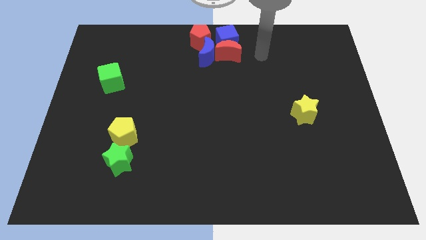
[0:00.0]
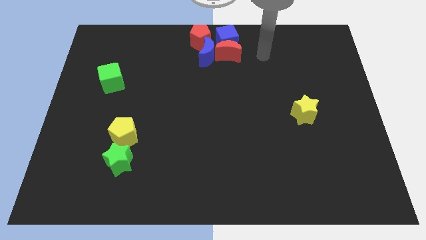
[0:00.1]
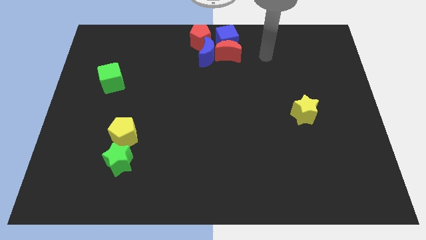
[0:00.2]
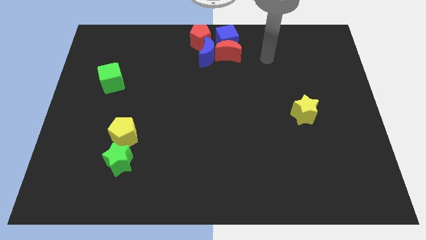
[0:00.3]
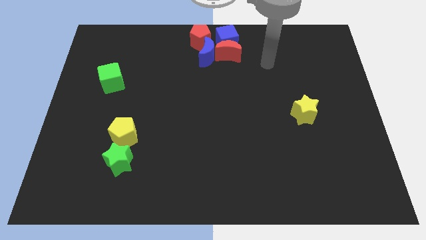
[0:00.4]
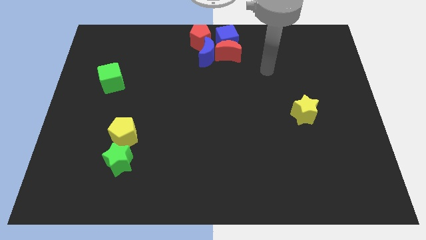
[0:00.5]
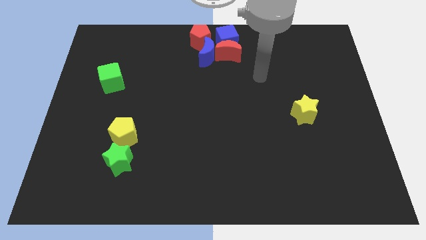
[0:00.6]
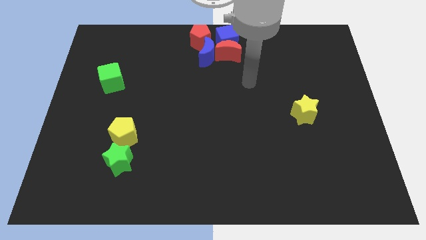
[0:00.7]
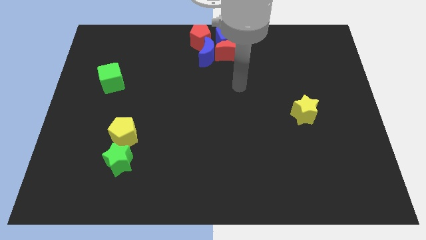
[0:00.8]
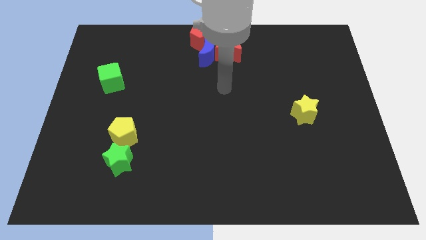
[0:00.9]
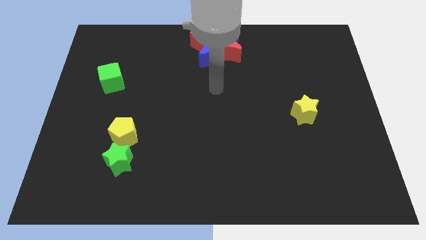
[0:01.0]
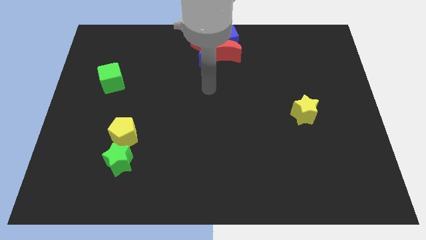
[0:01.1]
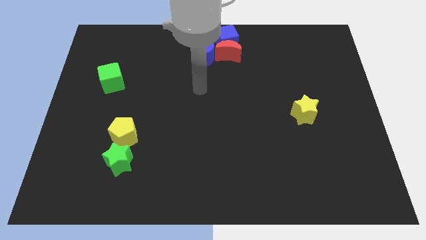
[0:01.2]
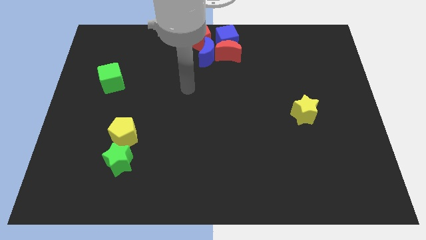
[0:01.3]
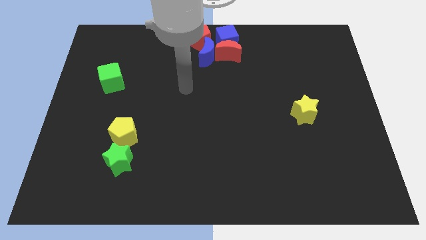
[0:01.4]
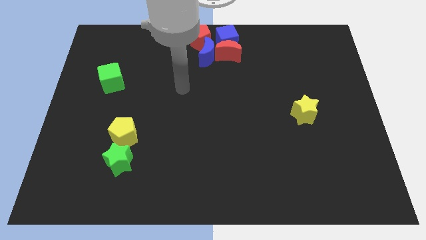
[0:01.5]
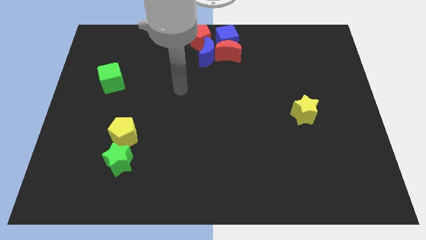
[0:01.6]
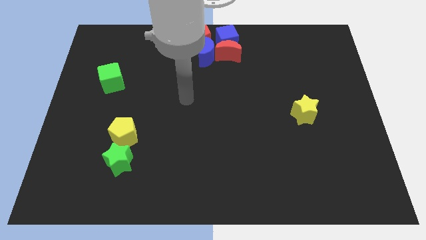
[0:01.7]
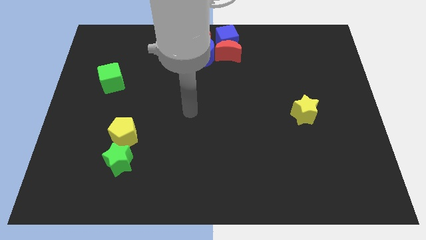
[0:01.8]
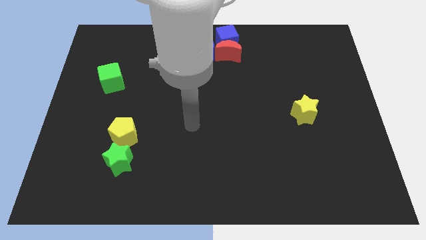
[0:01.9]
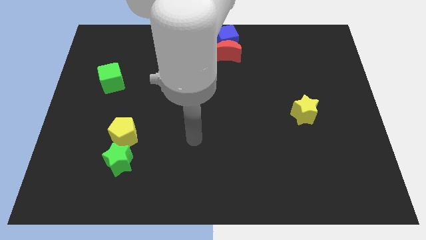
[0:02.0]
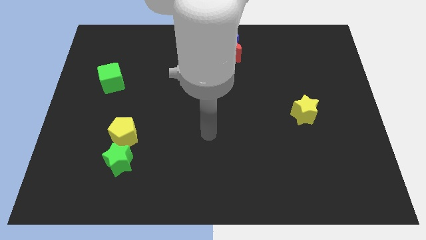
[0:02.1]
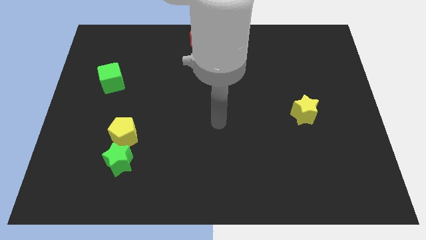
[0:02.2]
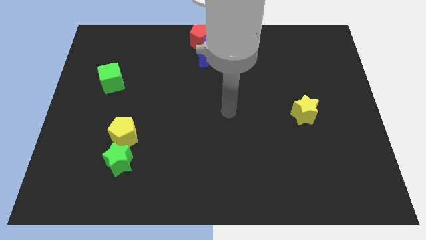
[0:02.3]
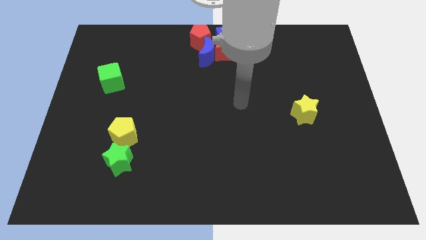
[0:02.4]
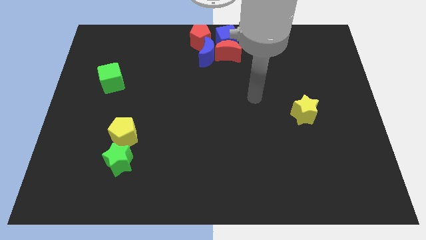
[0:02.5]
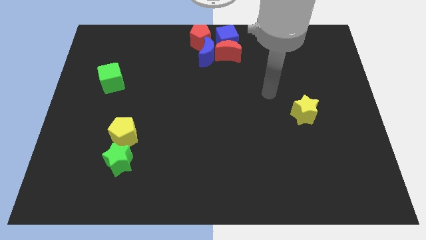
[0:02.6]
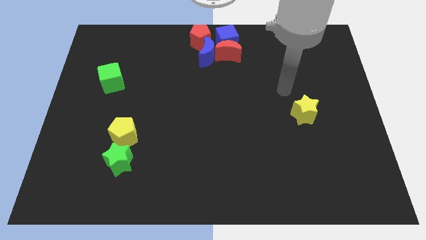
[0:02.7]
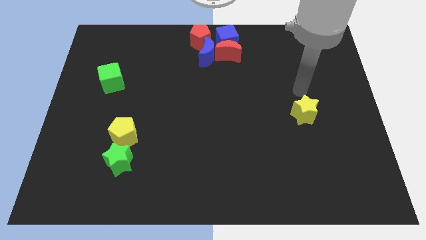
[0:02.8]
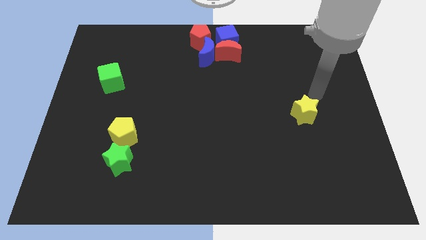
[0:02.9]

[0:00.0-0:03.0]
move your arm away from the red moon

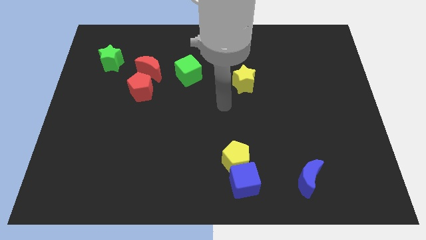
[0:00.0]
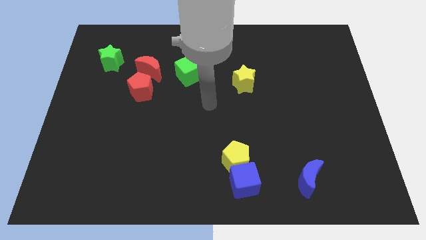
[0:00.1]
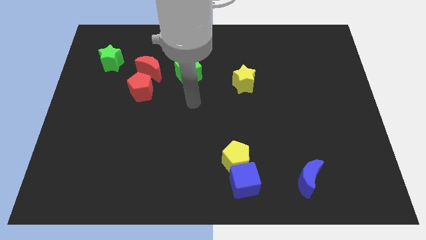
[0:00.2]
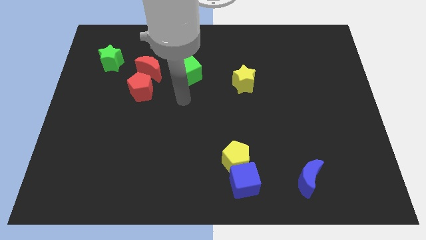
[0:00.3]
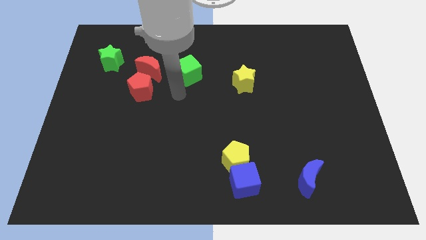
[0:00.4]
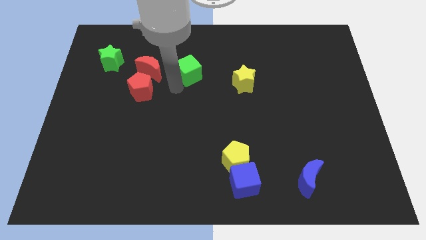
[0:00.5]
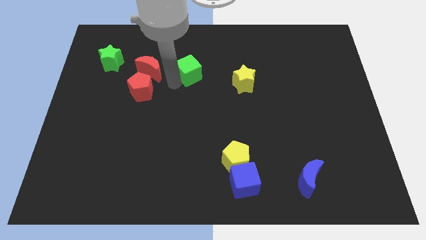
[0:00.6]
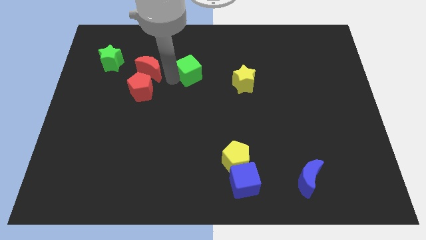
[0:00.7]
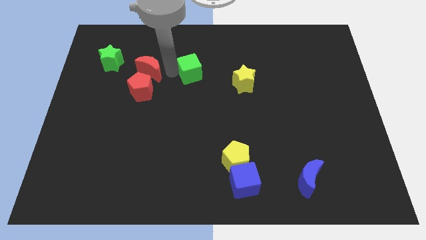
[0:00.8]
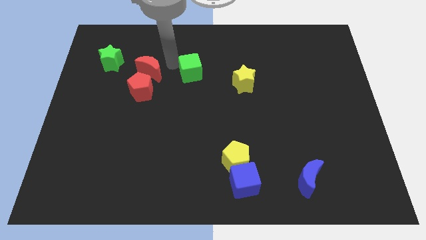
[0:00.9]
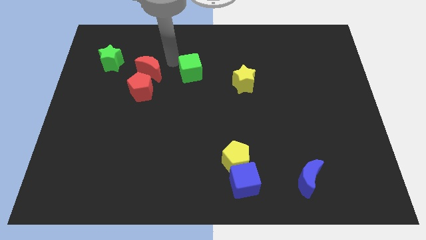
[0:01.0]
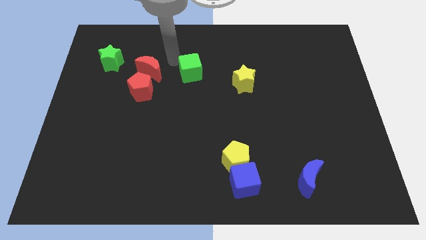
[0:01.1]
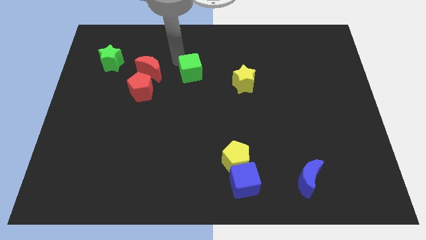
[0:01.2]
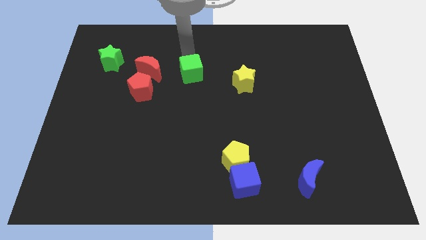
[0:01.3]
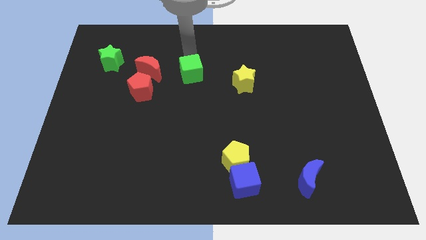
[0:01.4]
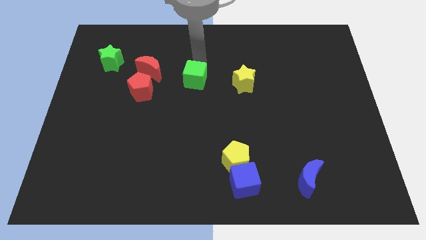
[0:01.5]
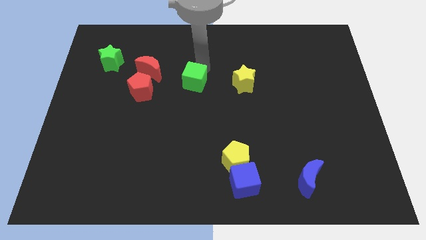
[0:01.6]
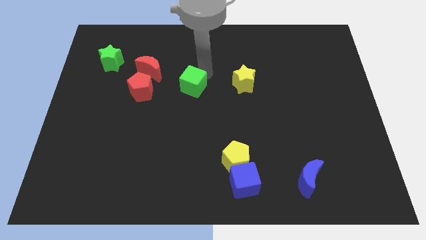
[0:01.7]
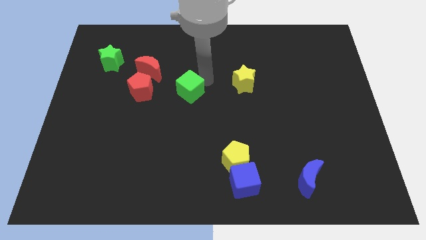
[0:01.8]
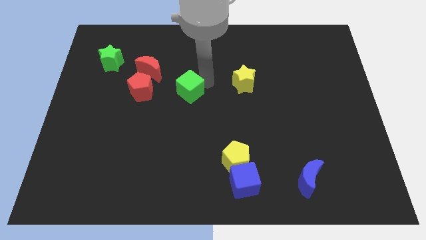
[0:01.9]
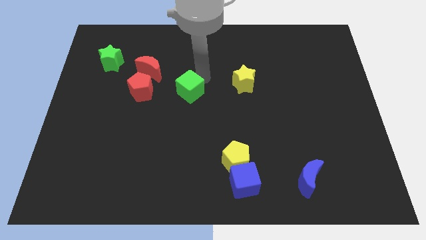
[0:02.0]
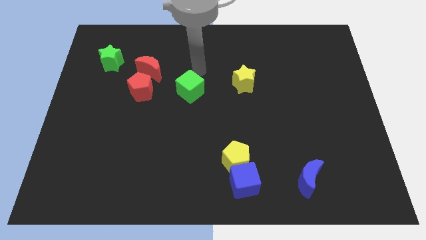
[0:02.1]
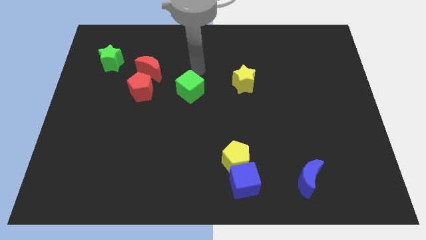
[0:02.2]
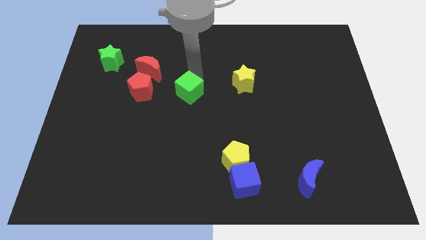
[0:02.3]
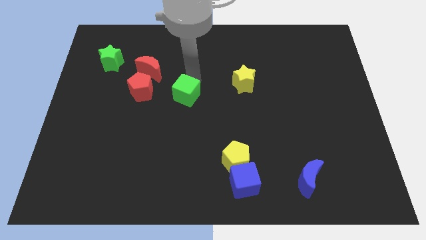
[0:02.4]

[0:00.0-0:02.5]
move your arm towards the green cube

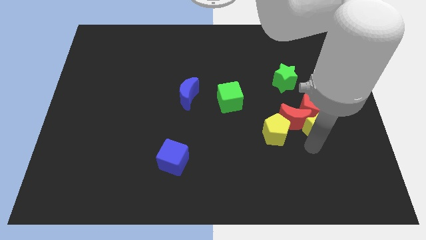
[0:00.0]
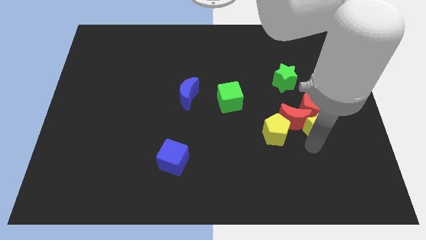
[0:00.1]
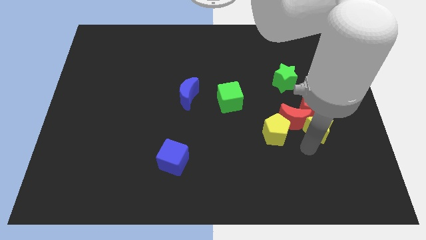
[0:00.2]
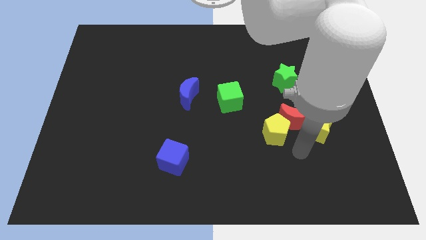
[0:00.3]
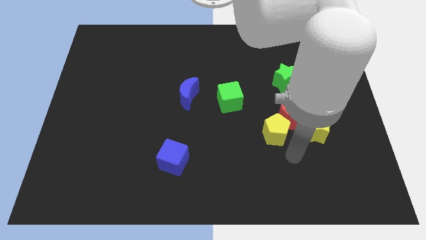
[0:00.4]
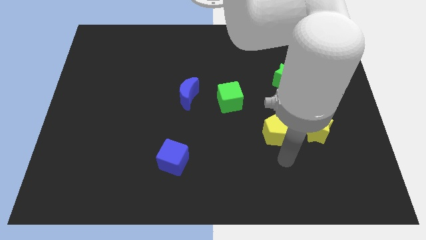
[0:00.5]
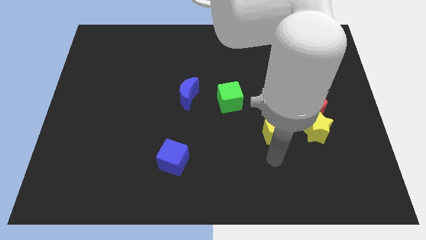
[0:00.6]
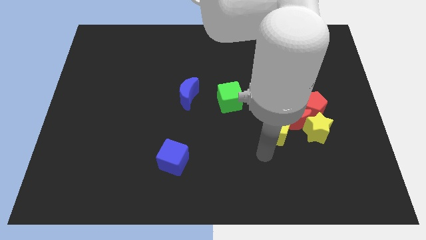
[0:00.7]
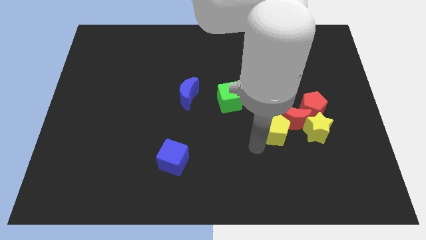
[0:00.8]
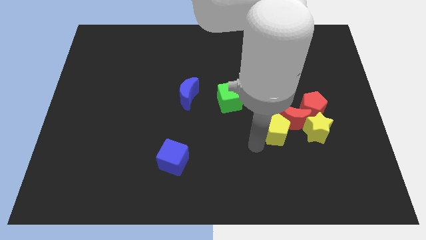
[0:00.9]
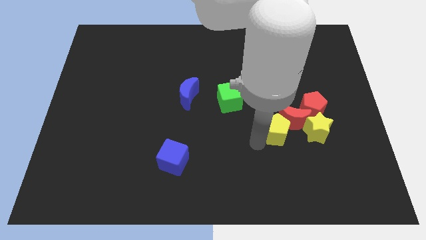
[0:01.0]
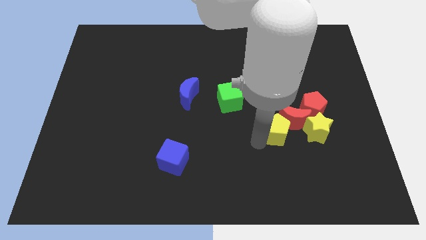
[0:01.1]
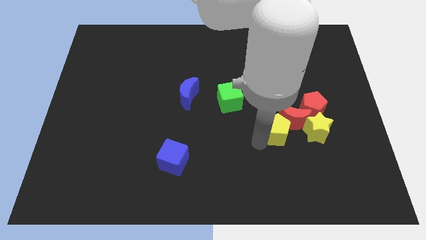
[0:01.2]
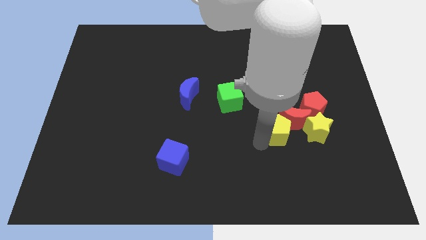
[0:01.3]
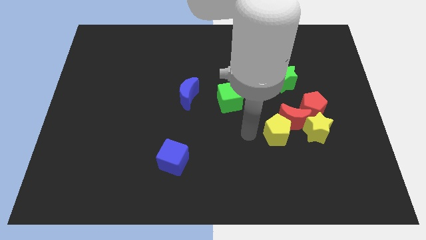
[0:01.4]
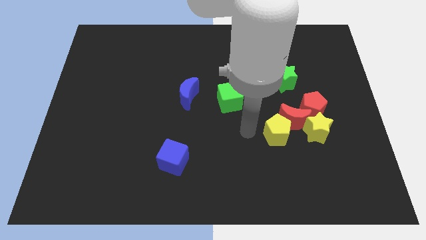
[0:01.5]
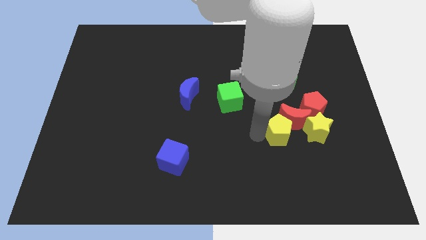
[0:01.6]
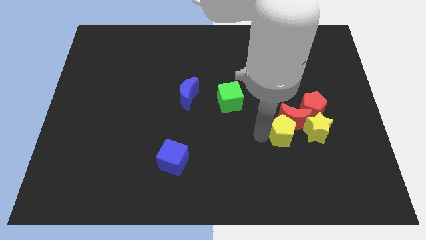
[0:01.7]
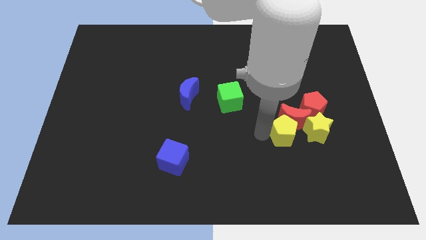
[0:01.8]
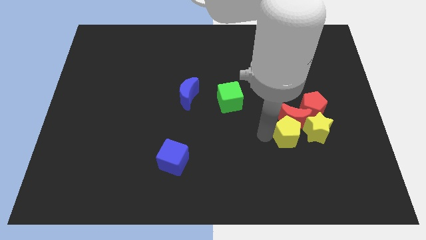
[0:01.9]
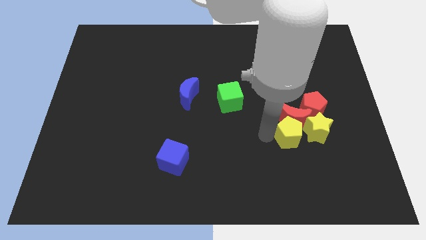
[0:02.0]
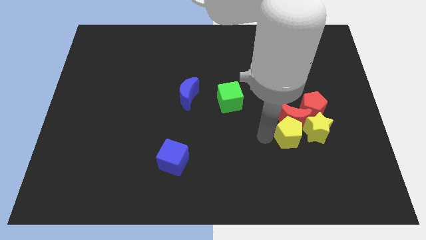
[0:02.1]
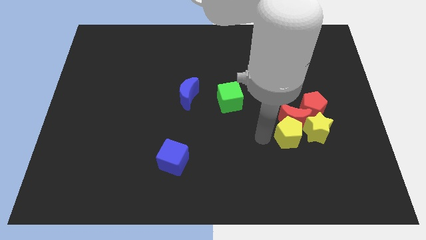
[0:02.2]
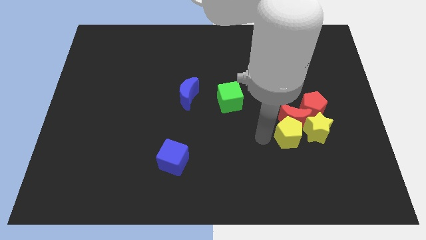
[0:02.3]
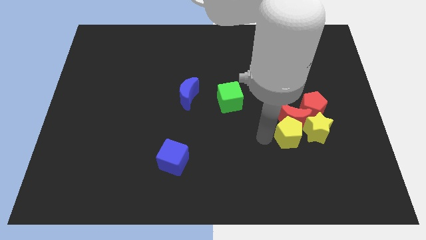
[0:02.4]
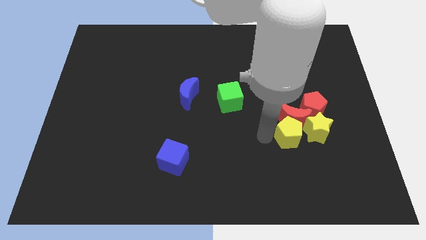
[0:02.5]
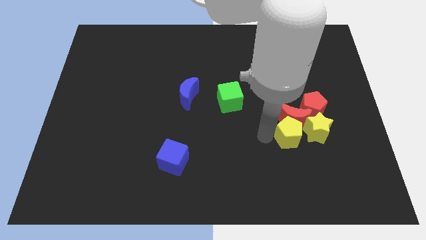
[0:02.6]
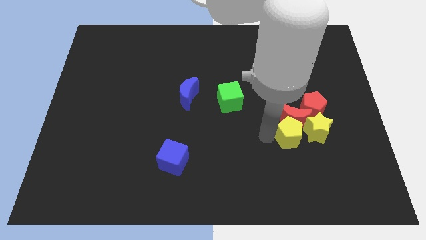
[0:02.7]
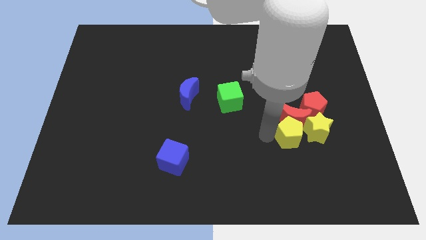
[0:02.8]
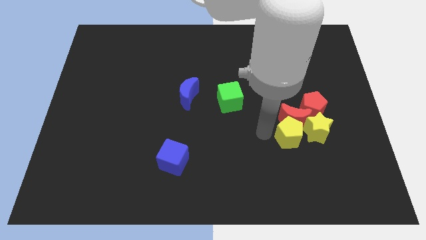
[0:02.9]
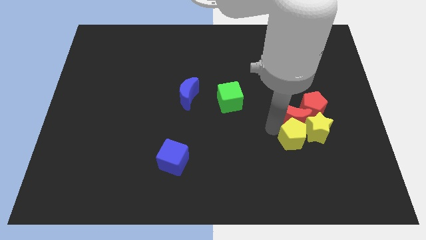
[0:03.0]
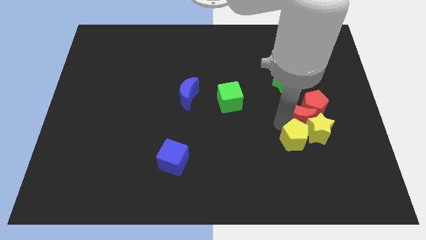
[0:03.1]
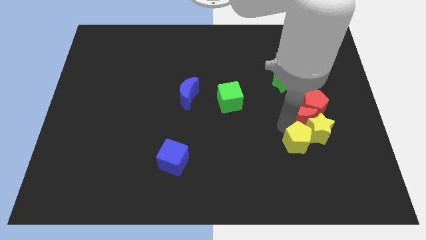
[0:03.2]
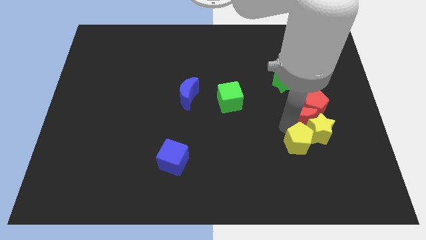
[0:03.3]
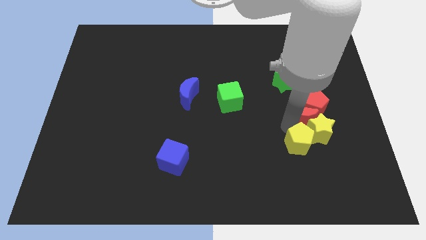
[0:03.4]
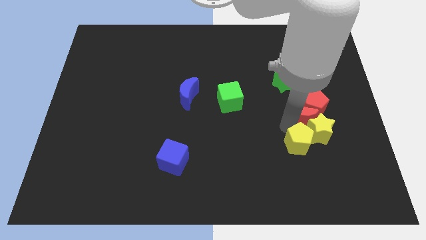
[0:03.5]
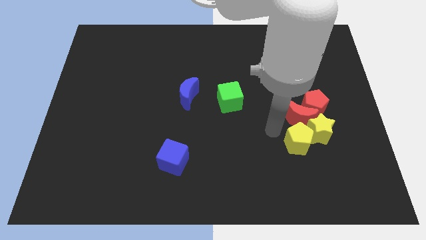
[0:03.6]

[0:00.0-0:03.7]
push the yellow pentagon into the yellow star
